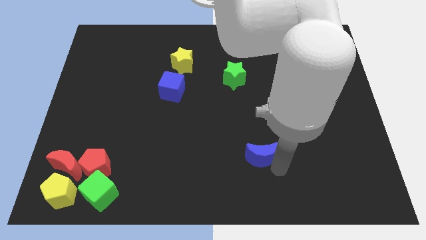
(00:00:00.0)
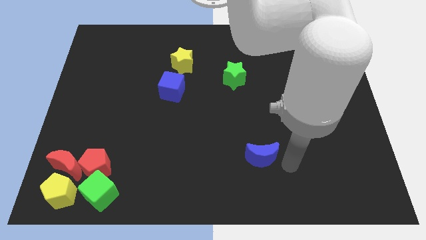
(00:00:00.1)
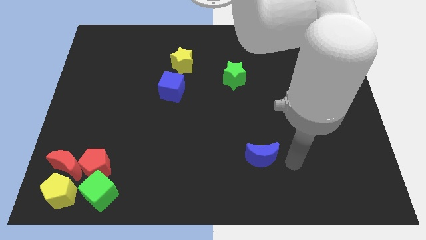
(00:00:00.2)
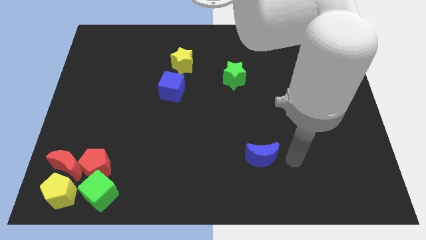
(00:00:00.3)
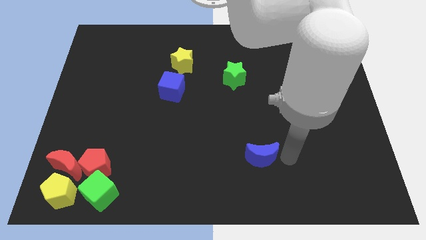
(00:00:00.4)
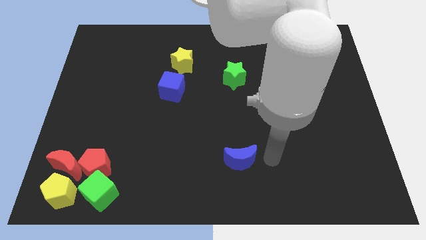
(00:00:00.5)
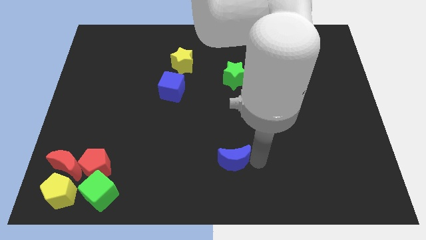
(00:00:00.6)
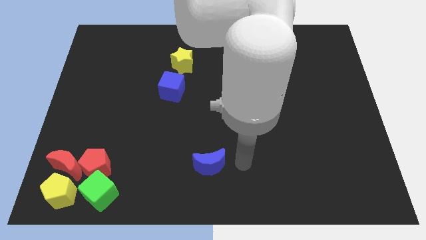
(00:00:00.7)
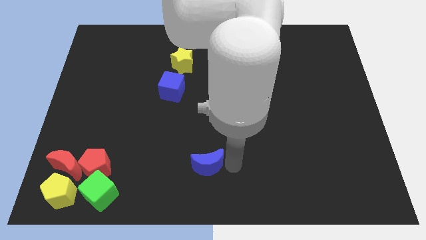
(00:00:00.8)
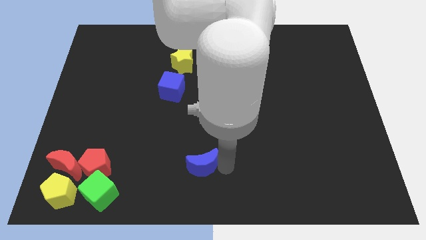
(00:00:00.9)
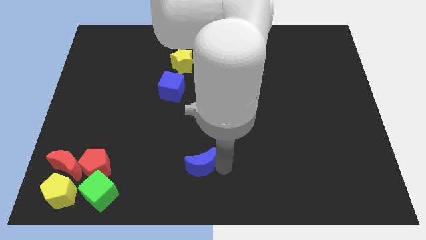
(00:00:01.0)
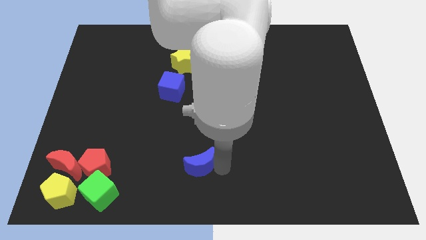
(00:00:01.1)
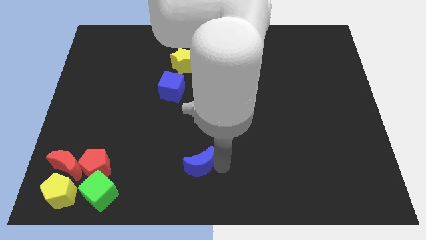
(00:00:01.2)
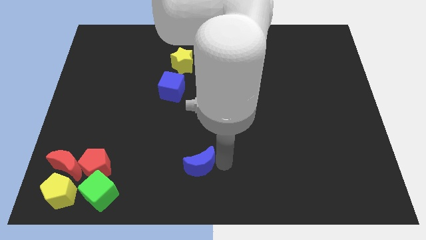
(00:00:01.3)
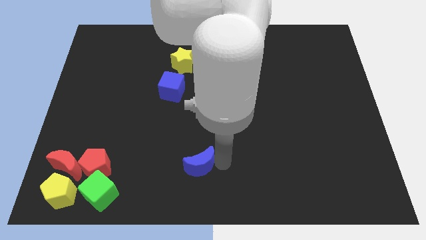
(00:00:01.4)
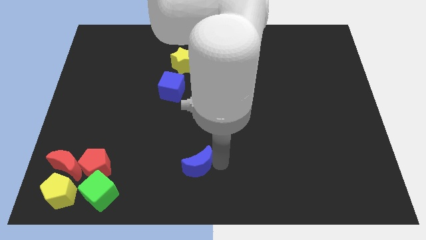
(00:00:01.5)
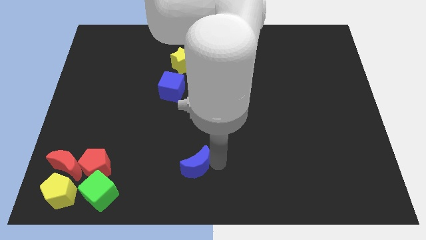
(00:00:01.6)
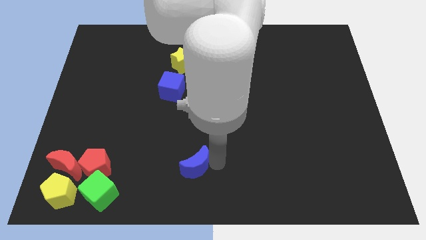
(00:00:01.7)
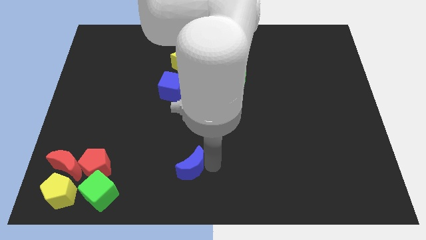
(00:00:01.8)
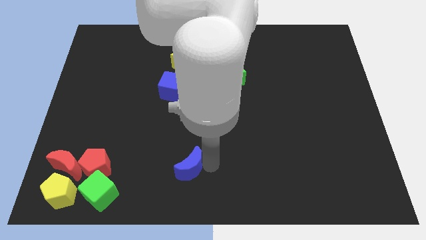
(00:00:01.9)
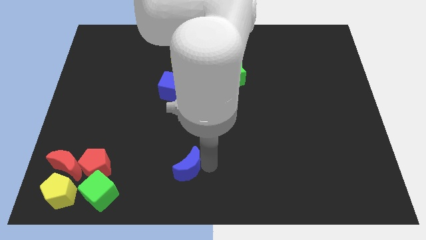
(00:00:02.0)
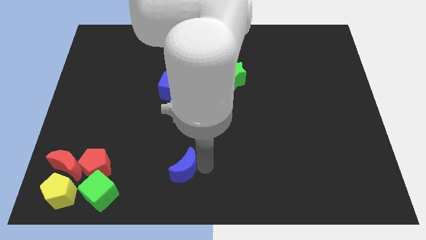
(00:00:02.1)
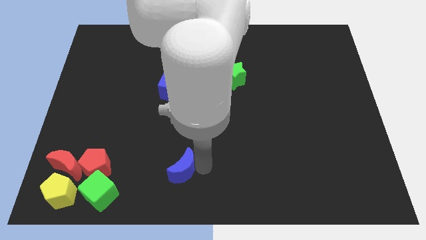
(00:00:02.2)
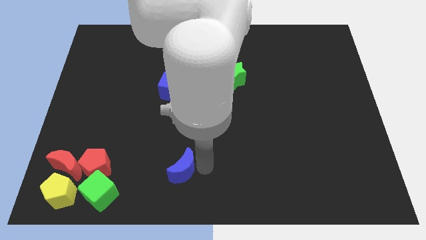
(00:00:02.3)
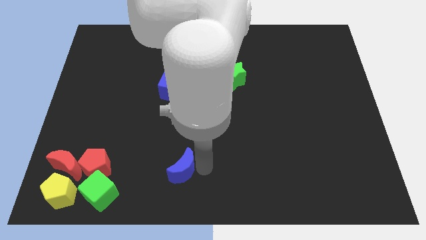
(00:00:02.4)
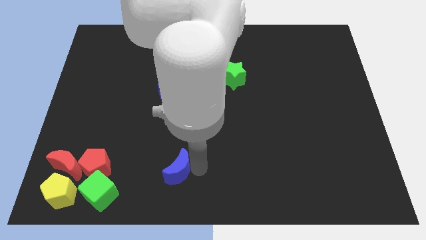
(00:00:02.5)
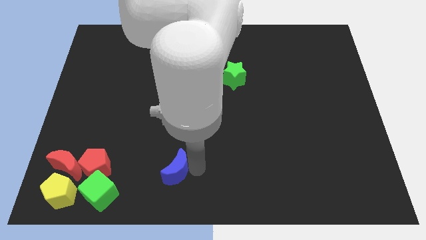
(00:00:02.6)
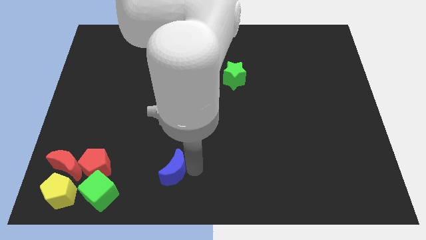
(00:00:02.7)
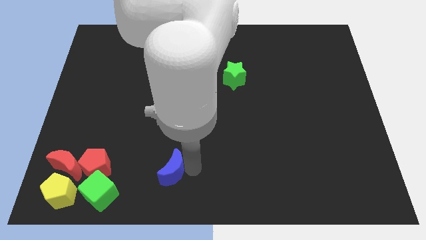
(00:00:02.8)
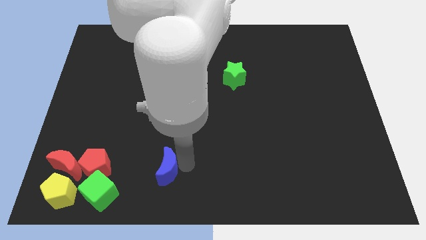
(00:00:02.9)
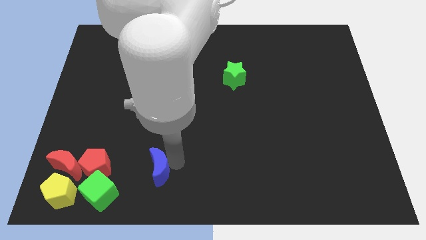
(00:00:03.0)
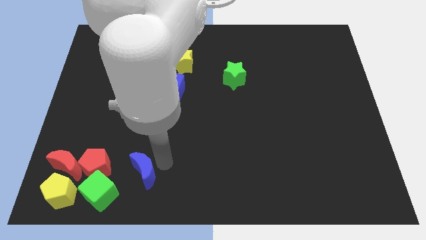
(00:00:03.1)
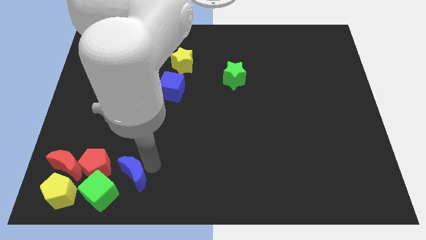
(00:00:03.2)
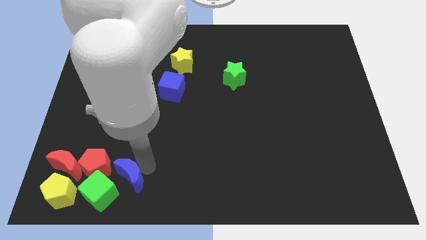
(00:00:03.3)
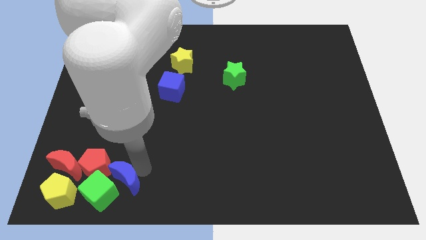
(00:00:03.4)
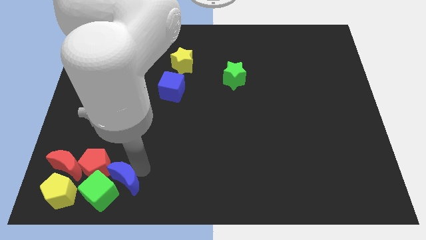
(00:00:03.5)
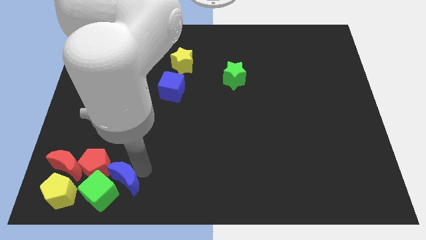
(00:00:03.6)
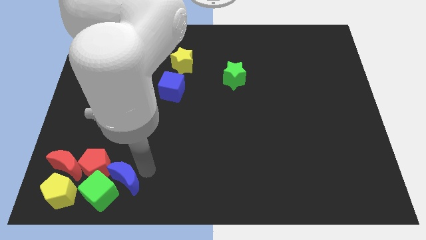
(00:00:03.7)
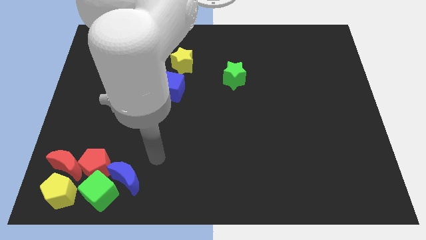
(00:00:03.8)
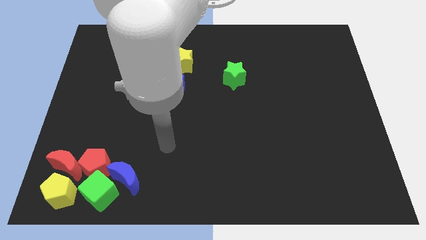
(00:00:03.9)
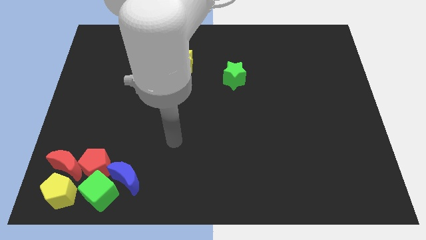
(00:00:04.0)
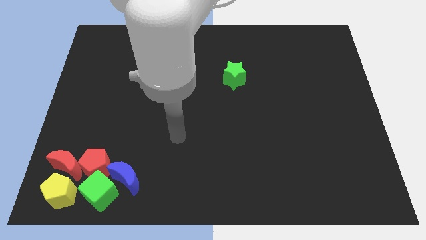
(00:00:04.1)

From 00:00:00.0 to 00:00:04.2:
move the blue crescent towards the right of the green cube

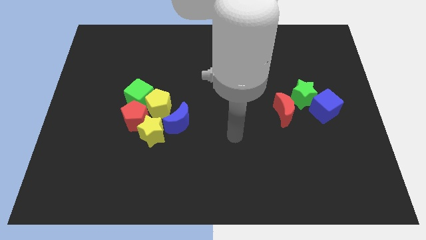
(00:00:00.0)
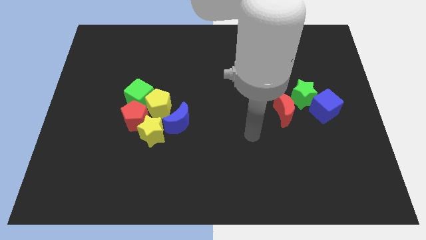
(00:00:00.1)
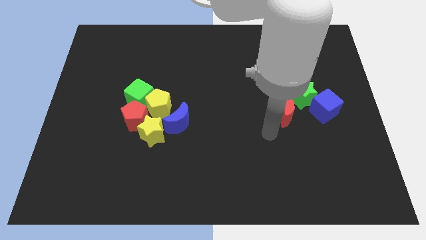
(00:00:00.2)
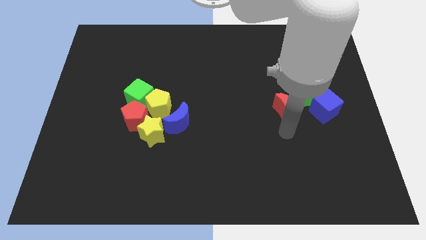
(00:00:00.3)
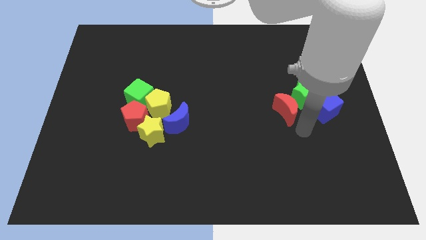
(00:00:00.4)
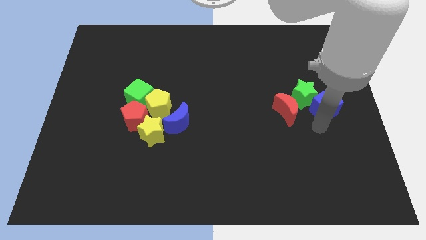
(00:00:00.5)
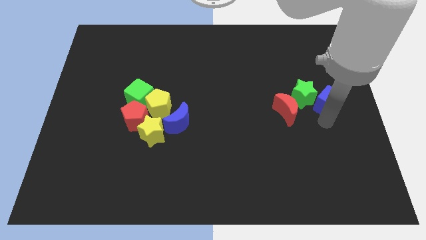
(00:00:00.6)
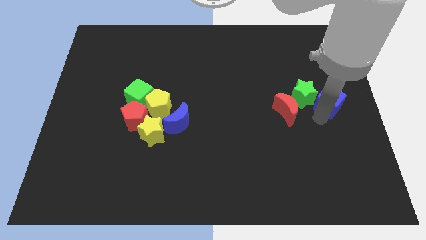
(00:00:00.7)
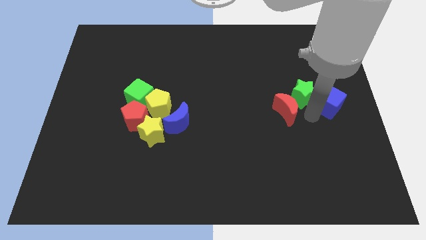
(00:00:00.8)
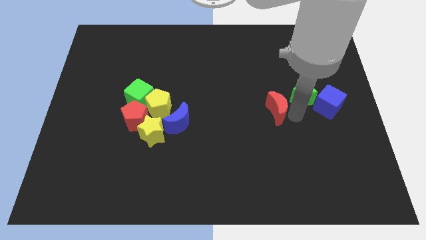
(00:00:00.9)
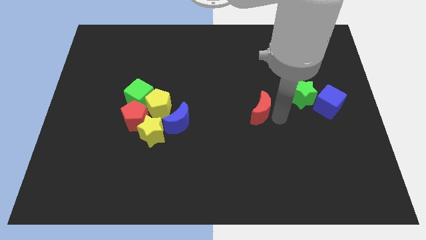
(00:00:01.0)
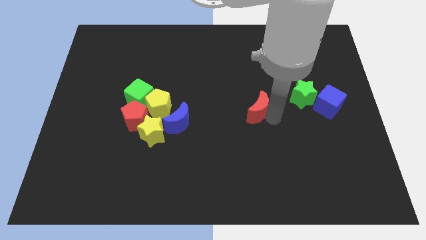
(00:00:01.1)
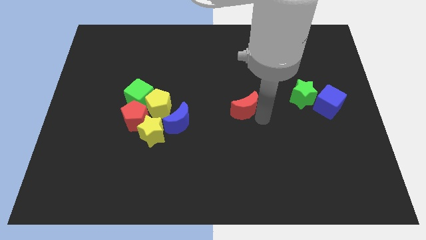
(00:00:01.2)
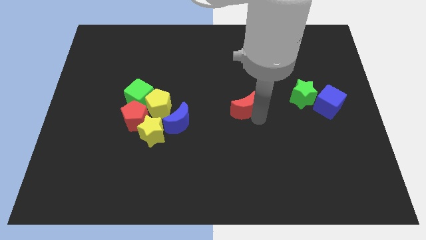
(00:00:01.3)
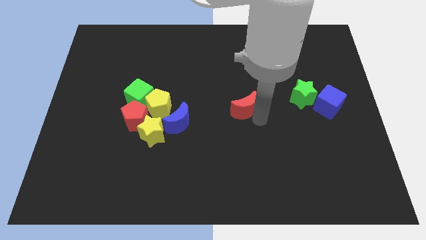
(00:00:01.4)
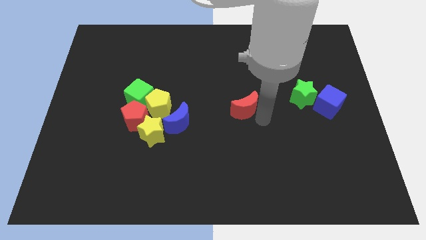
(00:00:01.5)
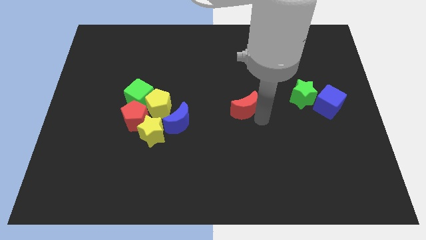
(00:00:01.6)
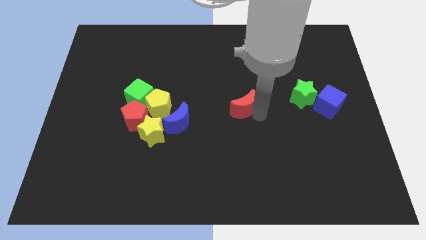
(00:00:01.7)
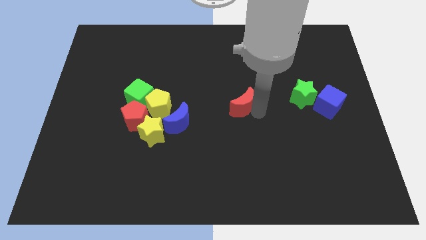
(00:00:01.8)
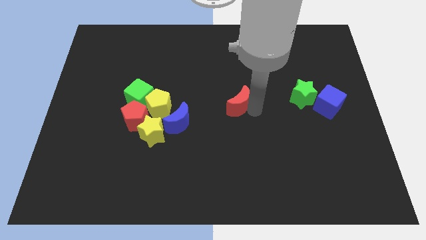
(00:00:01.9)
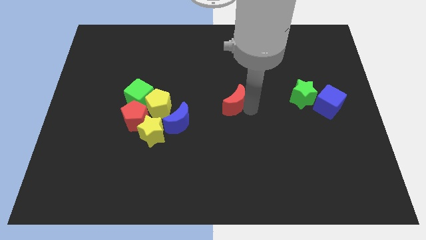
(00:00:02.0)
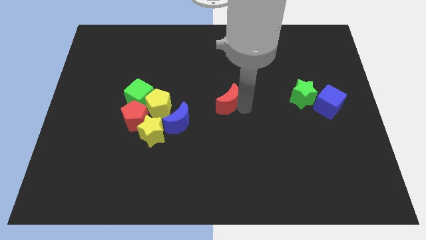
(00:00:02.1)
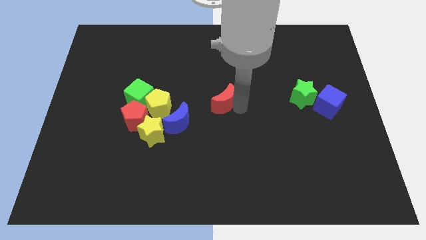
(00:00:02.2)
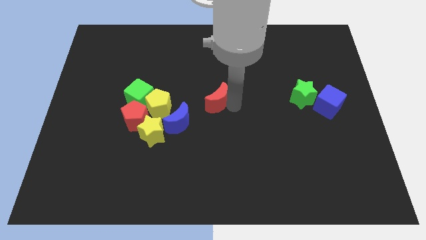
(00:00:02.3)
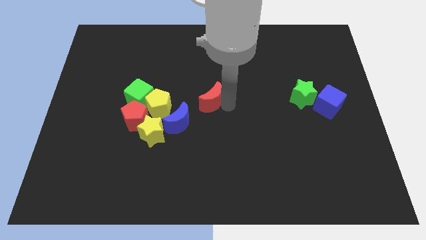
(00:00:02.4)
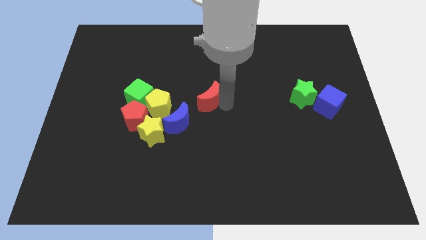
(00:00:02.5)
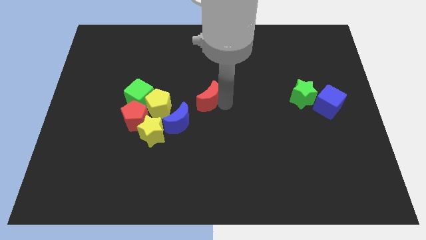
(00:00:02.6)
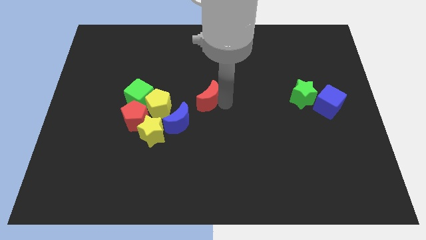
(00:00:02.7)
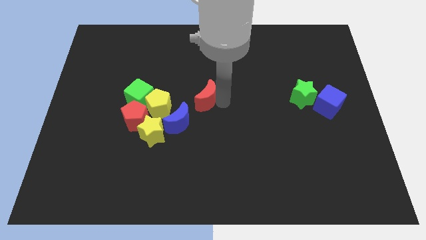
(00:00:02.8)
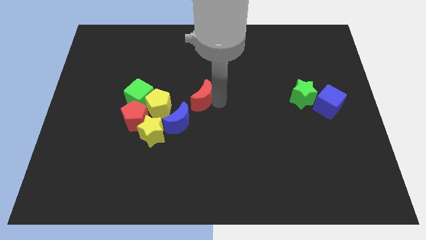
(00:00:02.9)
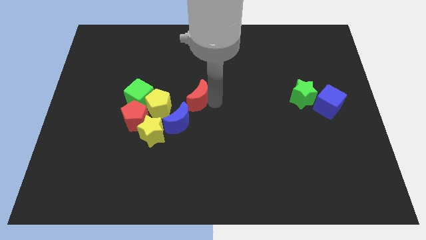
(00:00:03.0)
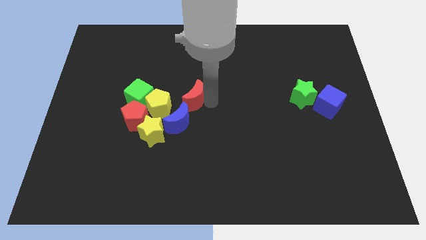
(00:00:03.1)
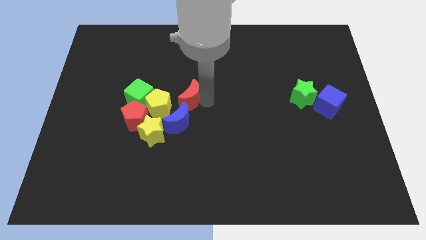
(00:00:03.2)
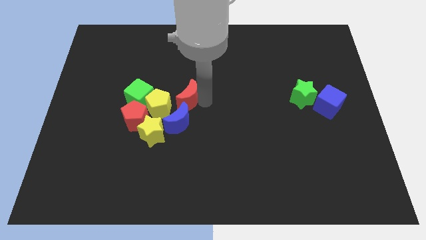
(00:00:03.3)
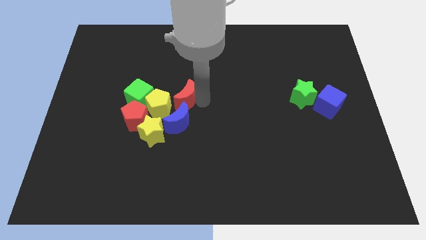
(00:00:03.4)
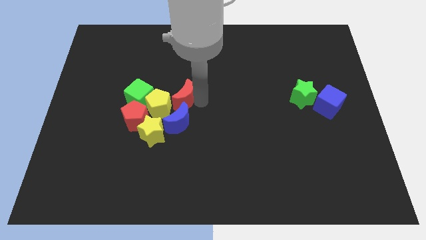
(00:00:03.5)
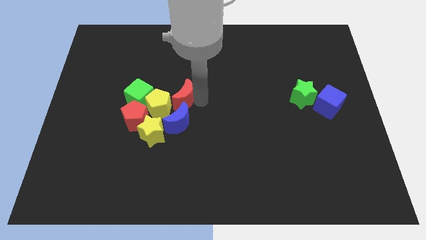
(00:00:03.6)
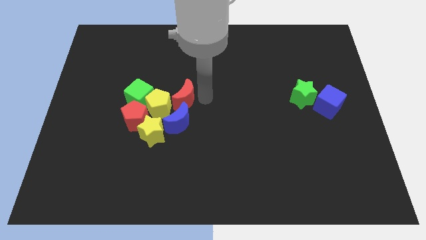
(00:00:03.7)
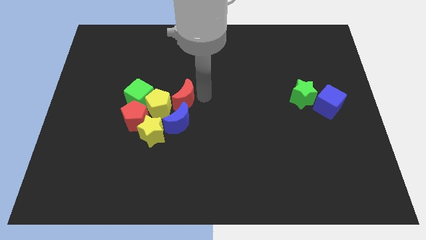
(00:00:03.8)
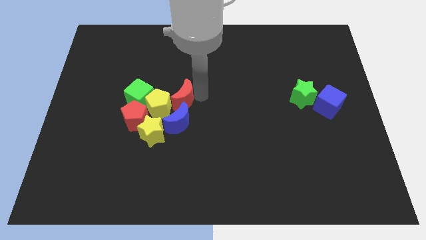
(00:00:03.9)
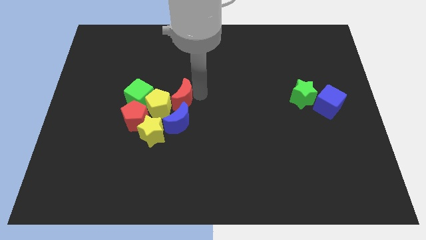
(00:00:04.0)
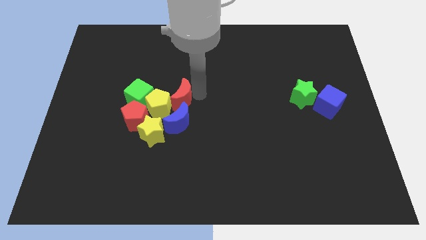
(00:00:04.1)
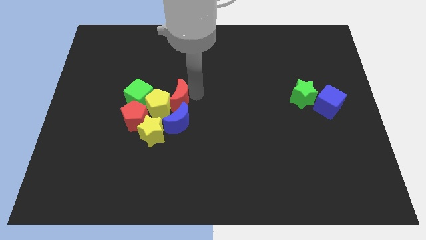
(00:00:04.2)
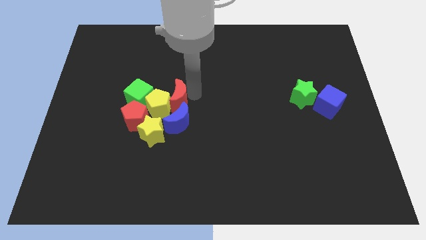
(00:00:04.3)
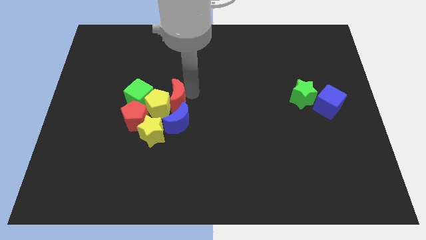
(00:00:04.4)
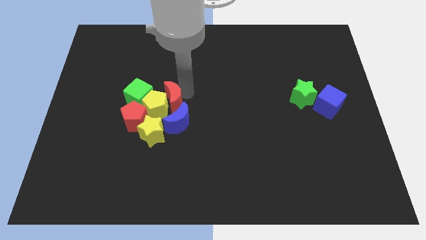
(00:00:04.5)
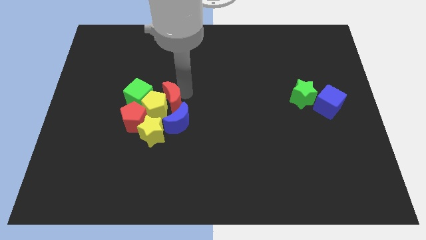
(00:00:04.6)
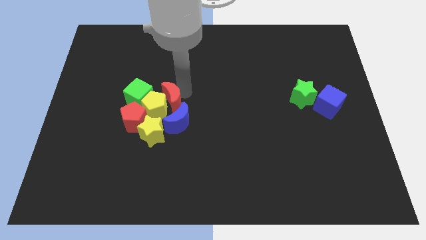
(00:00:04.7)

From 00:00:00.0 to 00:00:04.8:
push the red crescent into the yellow pentagon
